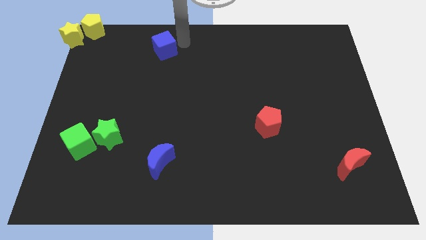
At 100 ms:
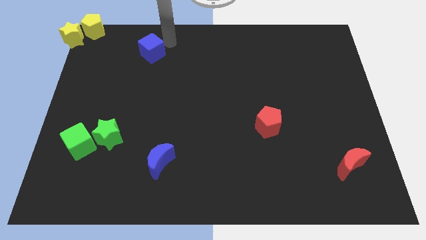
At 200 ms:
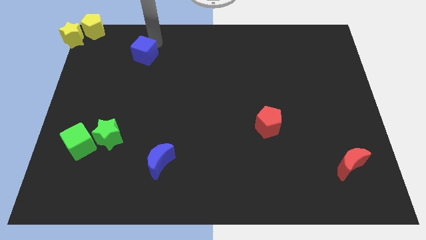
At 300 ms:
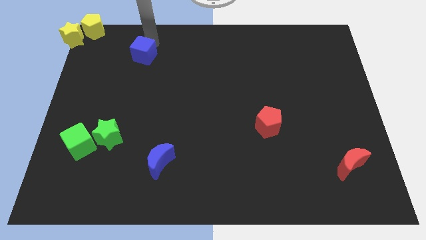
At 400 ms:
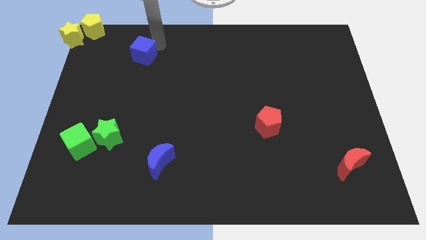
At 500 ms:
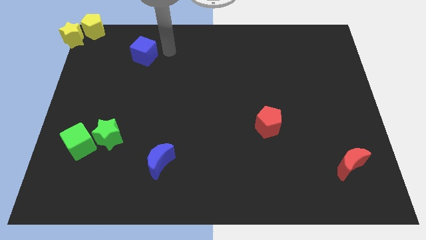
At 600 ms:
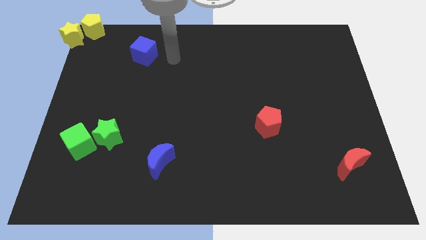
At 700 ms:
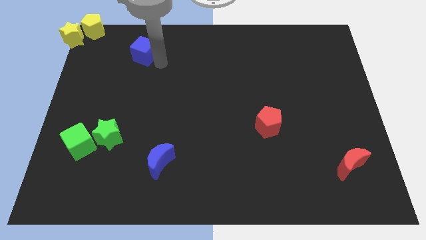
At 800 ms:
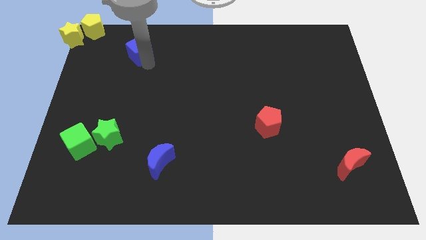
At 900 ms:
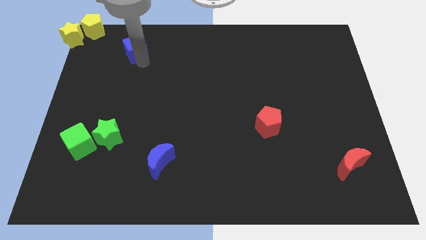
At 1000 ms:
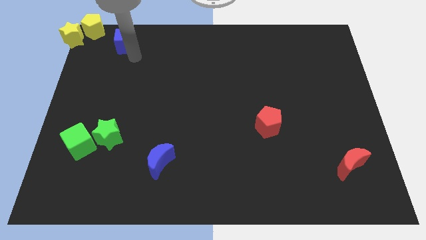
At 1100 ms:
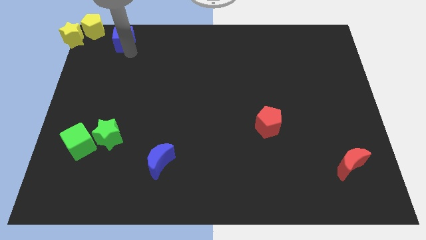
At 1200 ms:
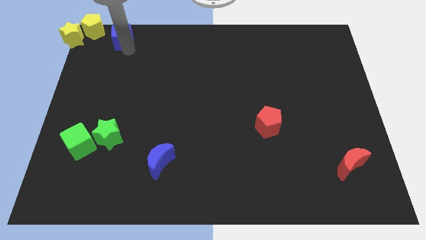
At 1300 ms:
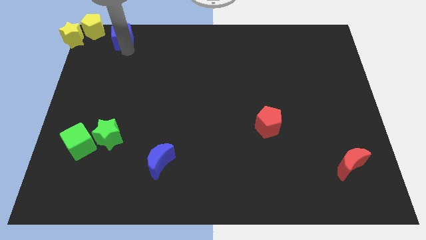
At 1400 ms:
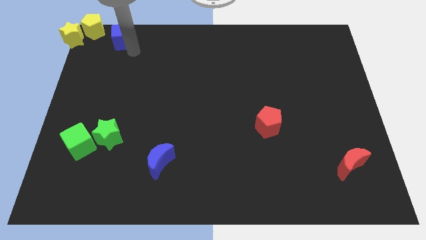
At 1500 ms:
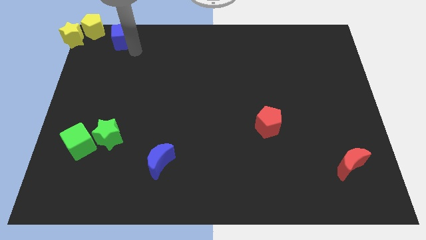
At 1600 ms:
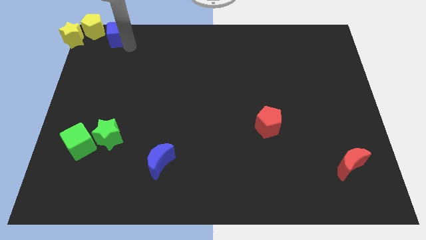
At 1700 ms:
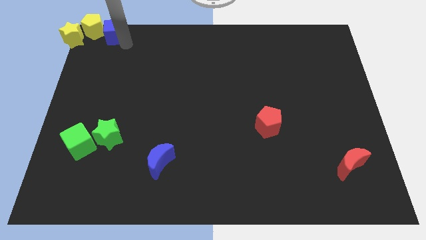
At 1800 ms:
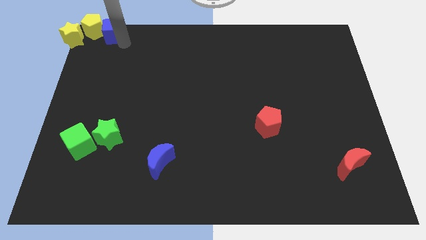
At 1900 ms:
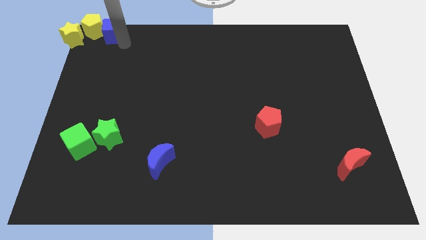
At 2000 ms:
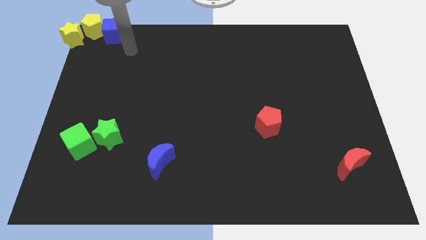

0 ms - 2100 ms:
move the blue cube towards the right of yellow pentagon

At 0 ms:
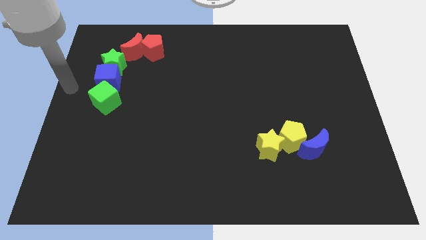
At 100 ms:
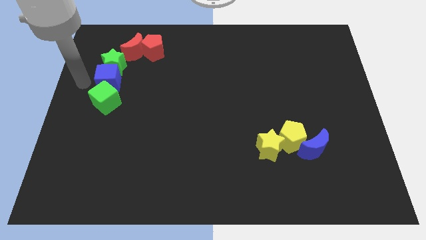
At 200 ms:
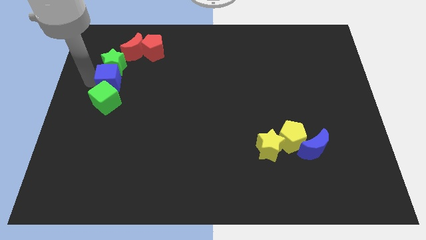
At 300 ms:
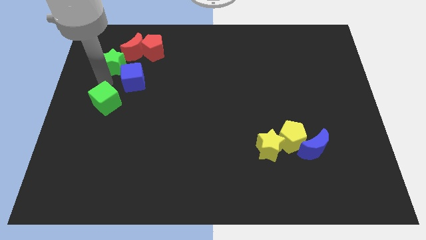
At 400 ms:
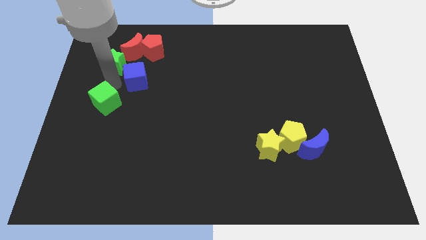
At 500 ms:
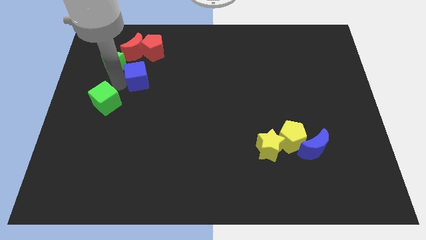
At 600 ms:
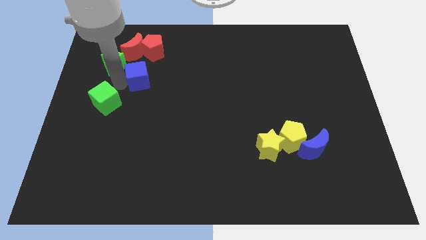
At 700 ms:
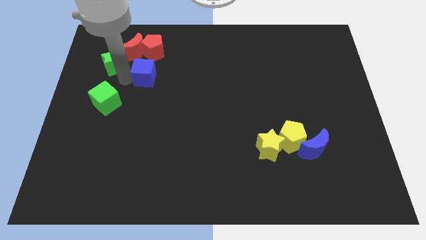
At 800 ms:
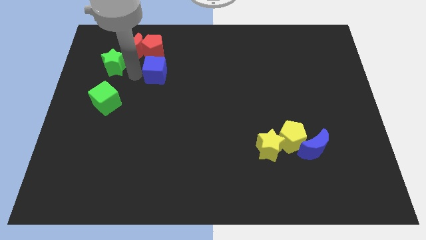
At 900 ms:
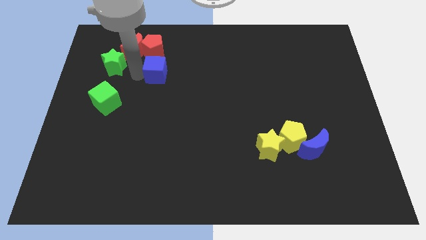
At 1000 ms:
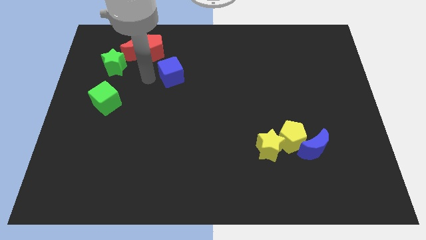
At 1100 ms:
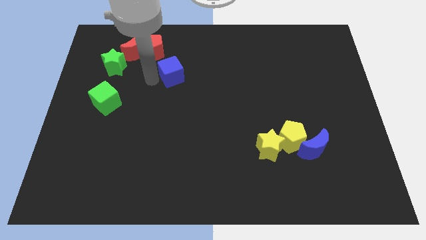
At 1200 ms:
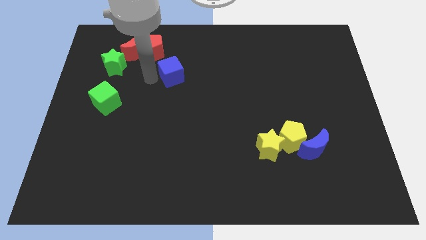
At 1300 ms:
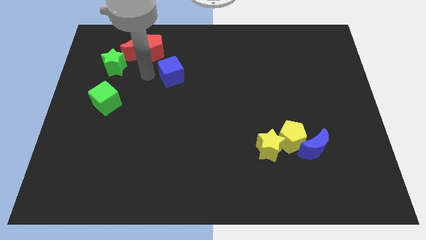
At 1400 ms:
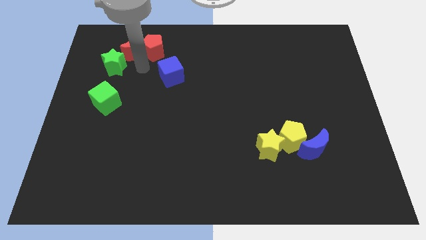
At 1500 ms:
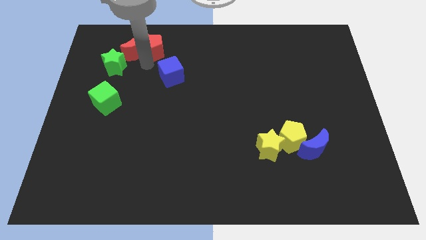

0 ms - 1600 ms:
separate the blue cube from the green blocks

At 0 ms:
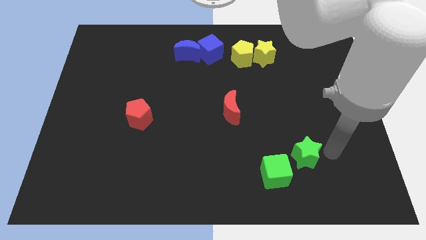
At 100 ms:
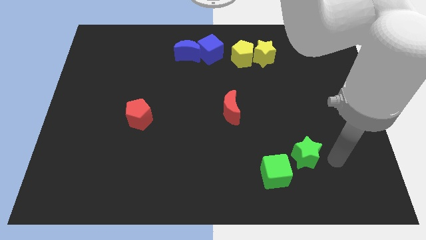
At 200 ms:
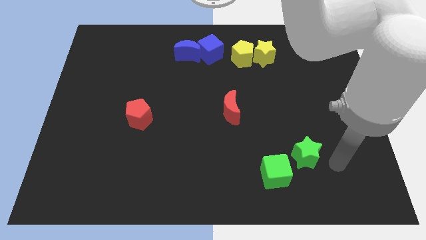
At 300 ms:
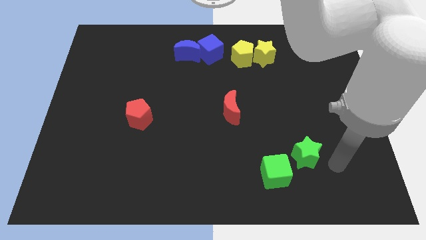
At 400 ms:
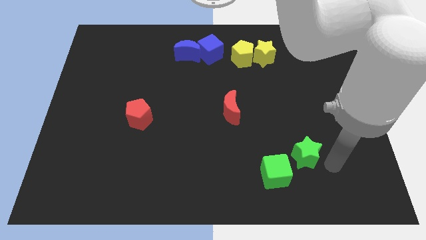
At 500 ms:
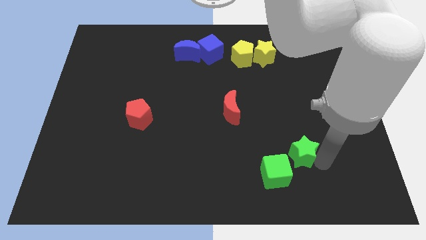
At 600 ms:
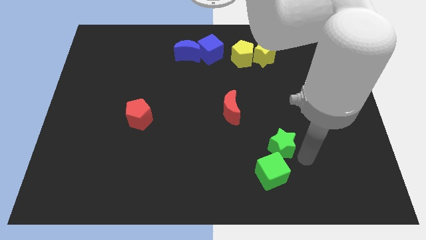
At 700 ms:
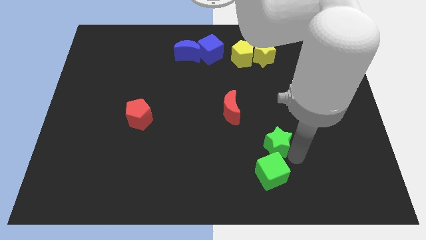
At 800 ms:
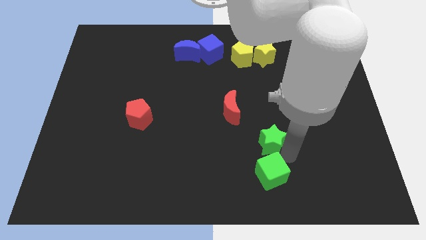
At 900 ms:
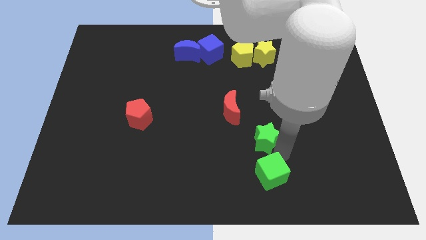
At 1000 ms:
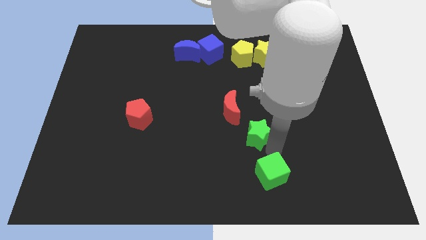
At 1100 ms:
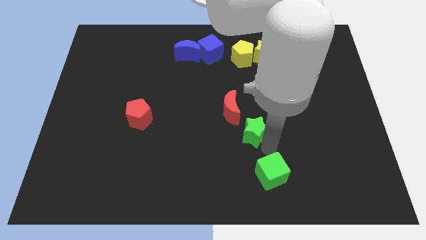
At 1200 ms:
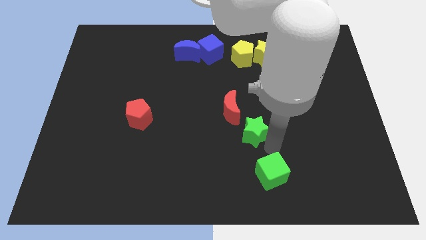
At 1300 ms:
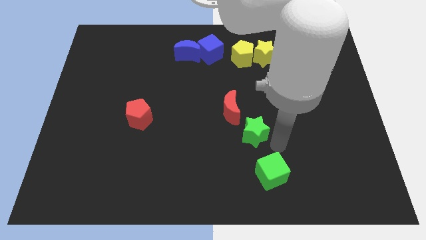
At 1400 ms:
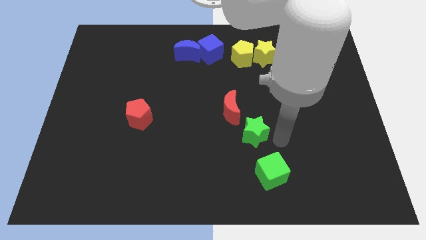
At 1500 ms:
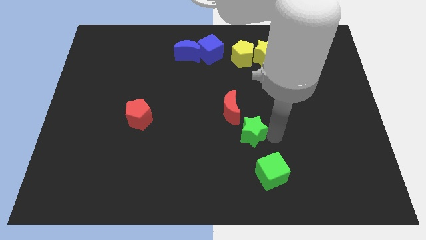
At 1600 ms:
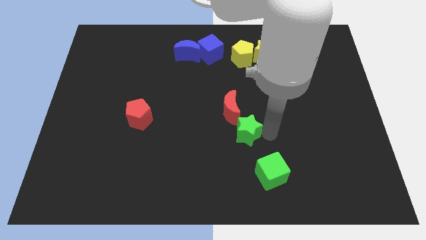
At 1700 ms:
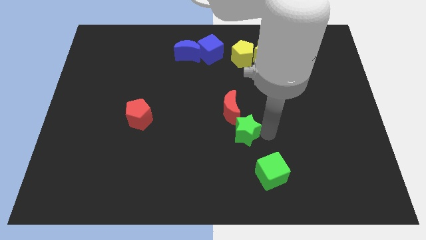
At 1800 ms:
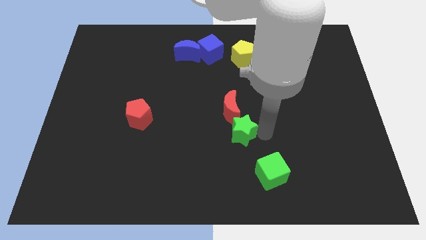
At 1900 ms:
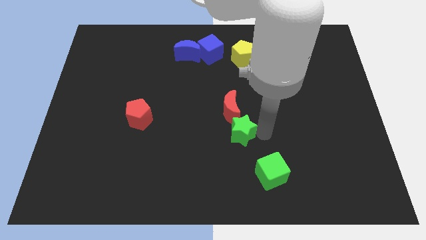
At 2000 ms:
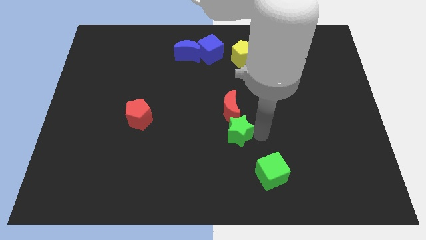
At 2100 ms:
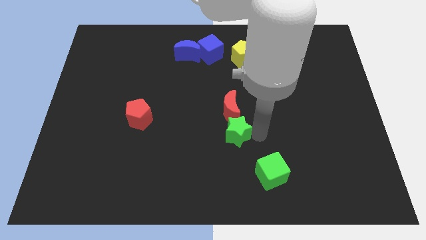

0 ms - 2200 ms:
place the green star below the red moon

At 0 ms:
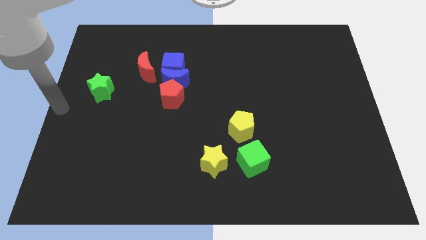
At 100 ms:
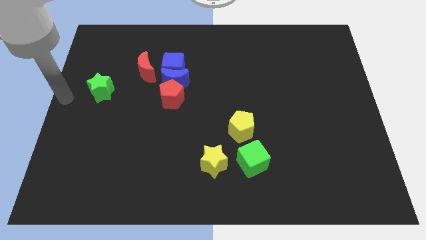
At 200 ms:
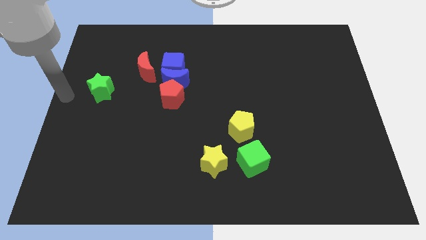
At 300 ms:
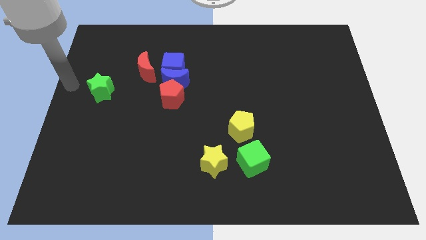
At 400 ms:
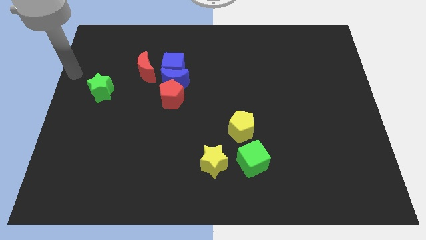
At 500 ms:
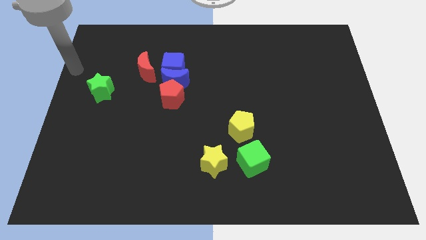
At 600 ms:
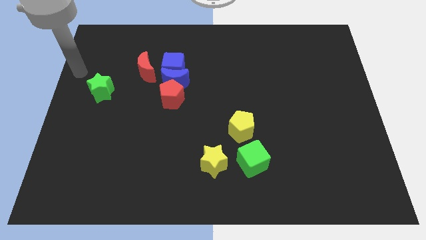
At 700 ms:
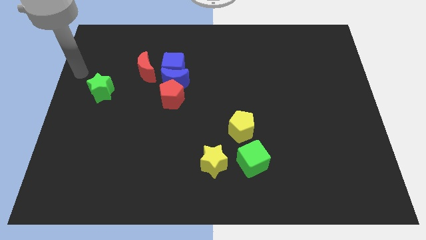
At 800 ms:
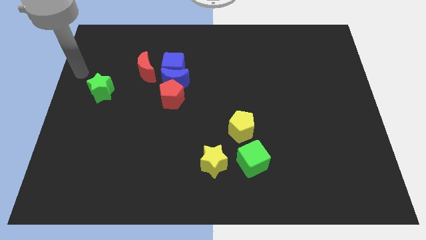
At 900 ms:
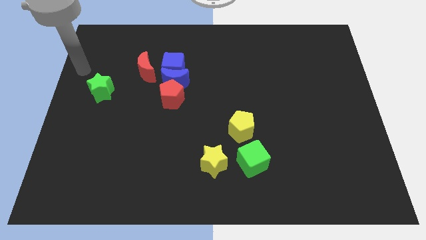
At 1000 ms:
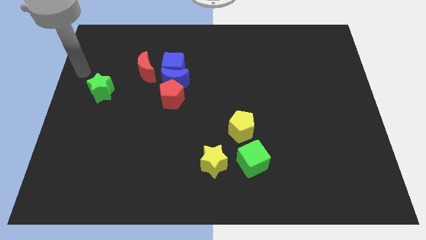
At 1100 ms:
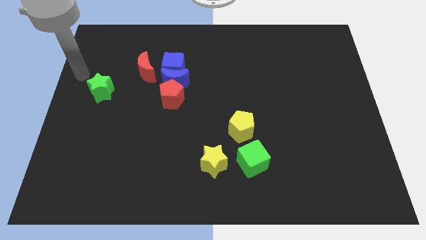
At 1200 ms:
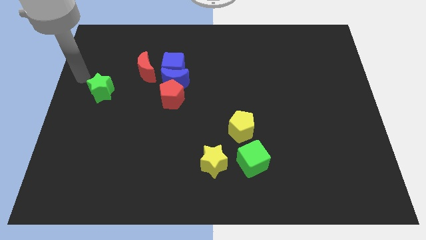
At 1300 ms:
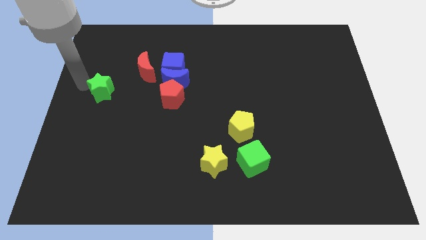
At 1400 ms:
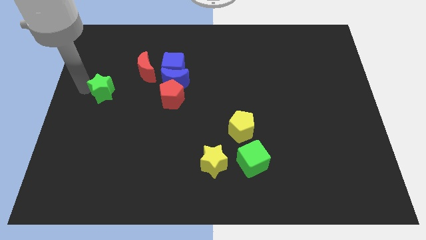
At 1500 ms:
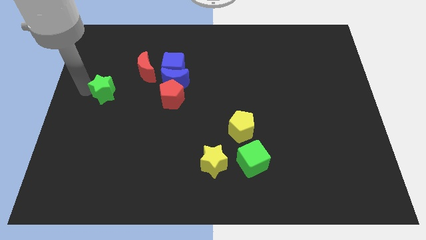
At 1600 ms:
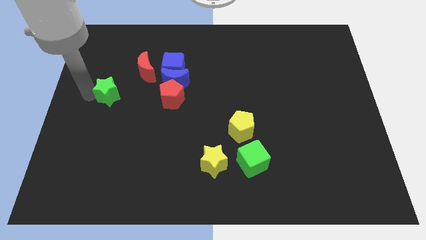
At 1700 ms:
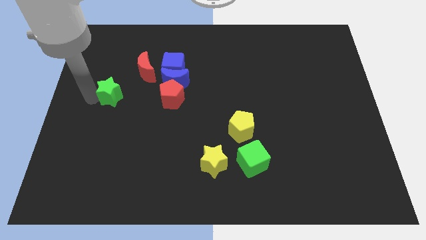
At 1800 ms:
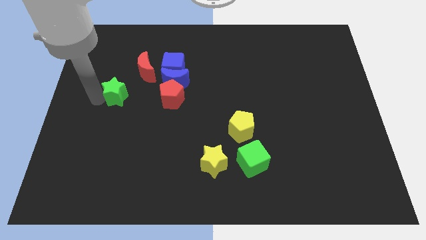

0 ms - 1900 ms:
push the green star slightly right of the board

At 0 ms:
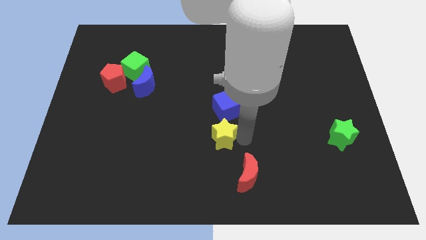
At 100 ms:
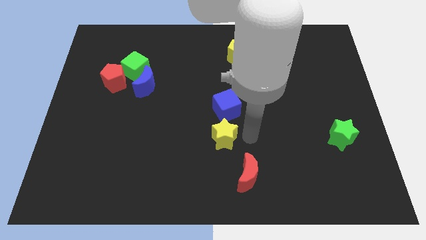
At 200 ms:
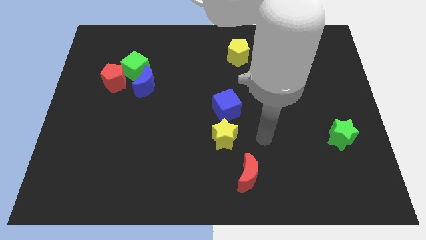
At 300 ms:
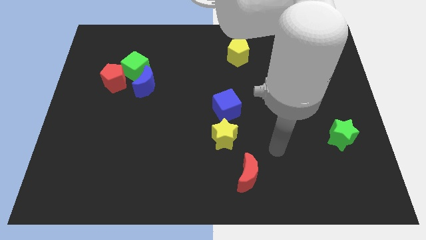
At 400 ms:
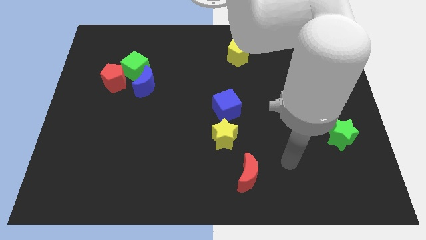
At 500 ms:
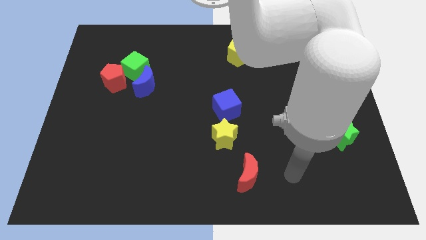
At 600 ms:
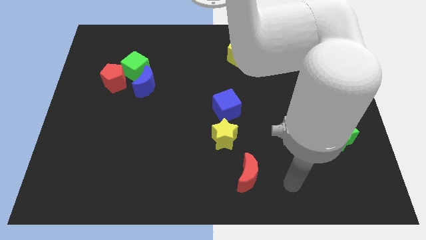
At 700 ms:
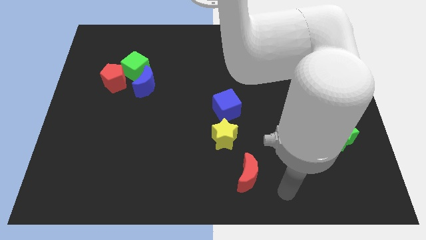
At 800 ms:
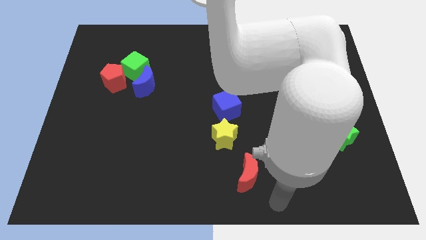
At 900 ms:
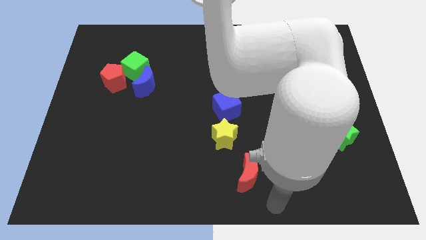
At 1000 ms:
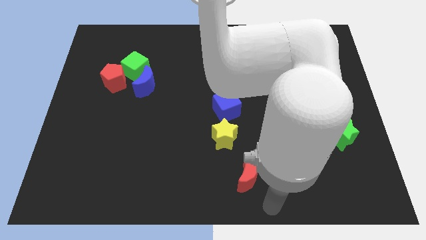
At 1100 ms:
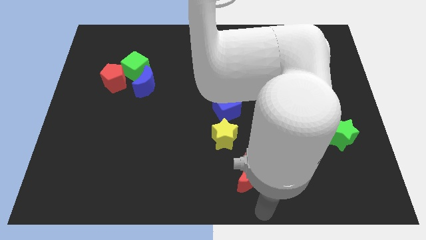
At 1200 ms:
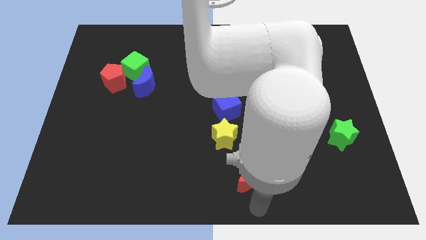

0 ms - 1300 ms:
move your arm away from the yellow star
